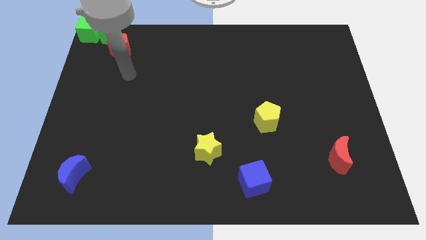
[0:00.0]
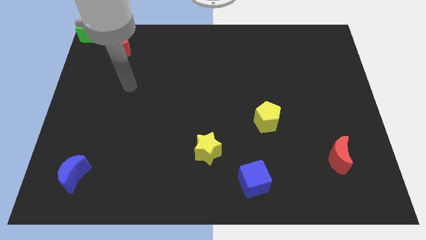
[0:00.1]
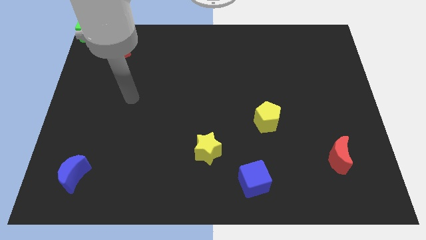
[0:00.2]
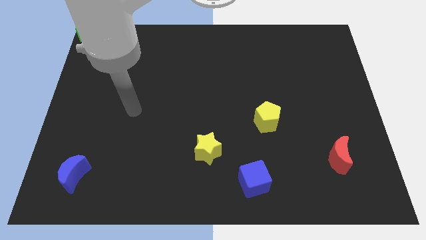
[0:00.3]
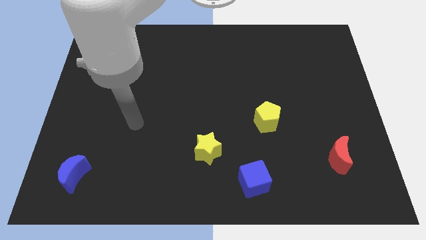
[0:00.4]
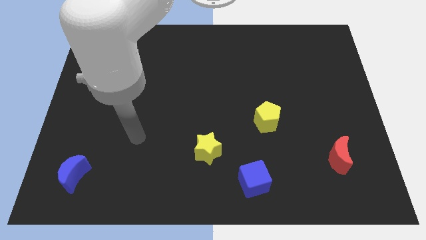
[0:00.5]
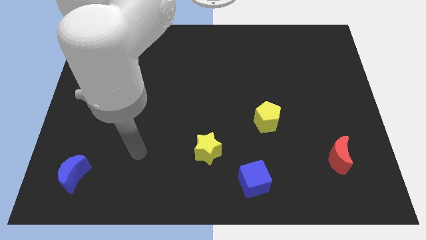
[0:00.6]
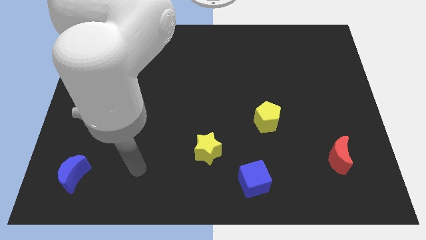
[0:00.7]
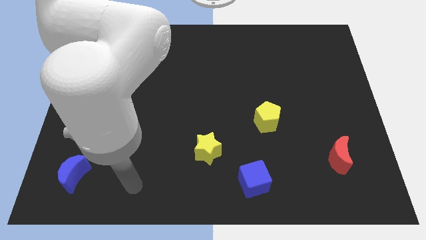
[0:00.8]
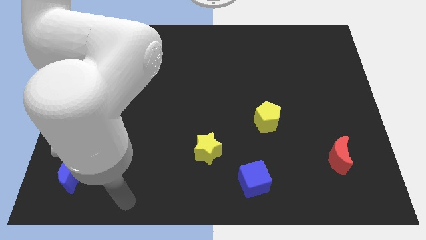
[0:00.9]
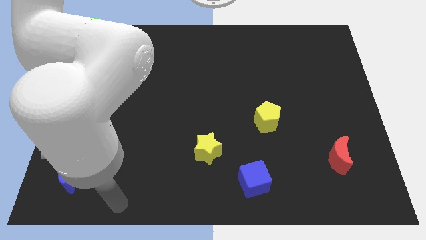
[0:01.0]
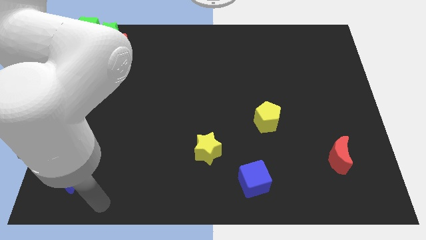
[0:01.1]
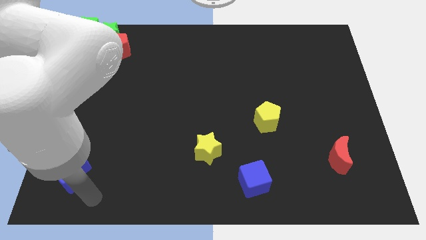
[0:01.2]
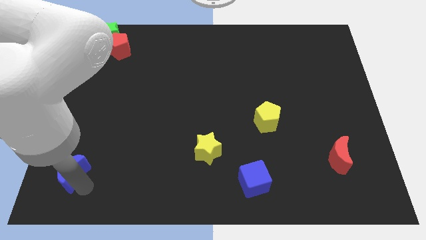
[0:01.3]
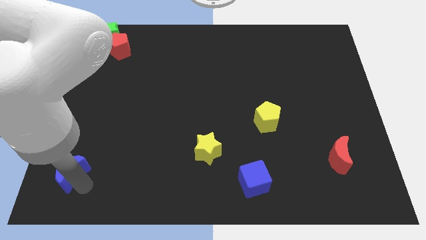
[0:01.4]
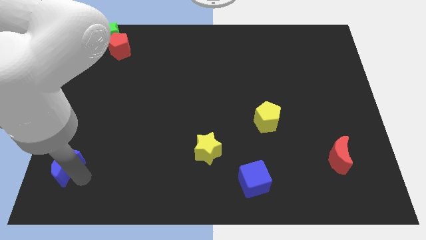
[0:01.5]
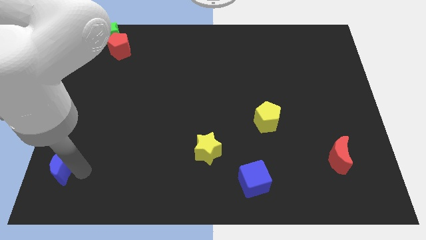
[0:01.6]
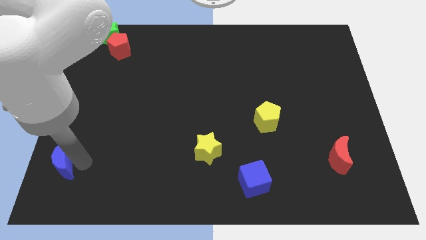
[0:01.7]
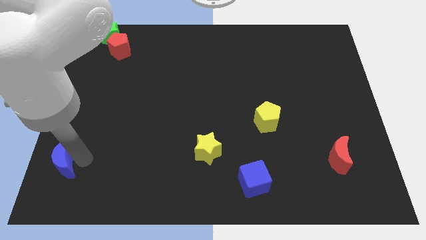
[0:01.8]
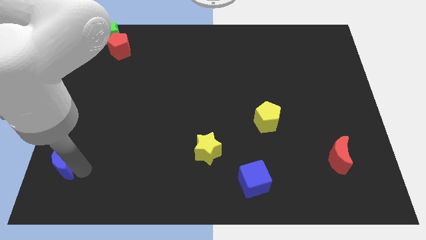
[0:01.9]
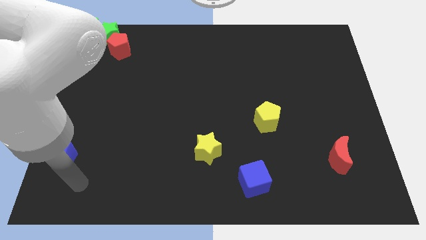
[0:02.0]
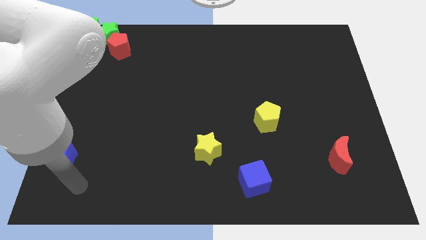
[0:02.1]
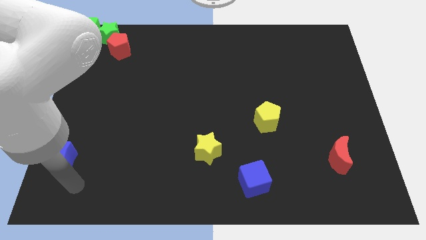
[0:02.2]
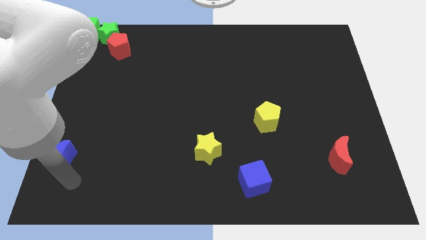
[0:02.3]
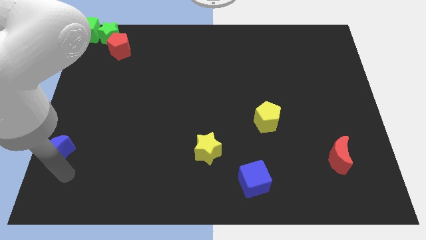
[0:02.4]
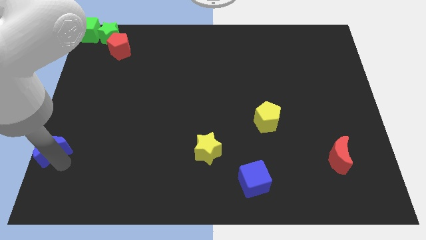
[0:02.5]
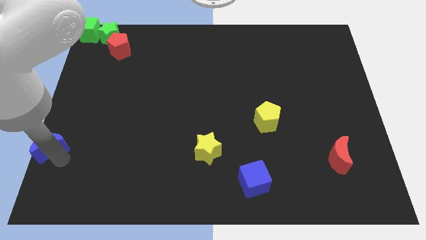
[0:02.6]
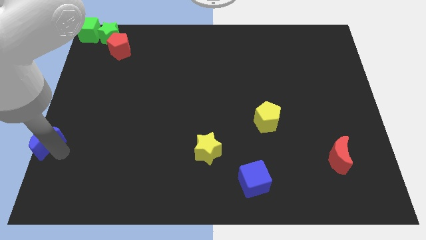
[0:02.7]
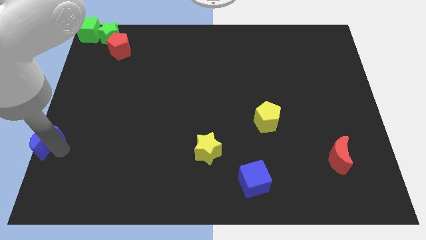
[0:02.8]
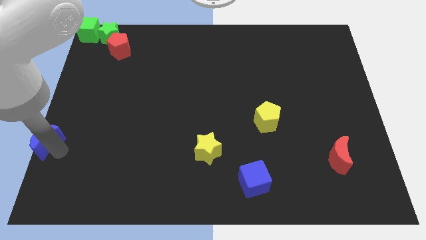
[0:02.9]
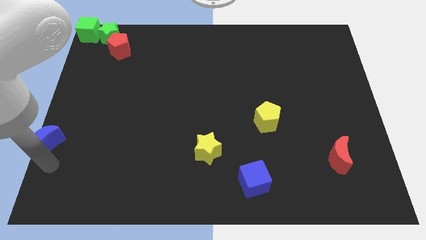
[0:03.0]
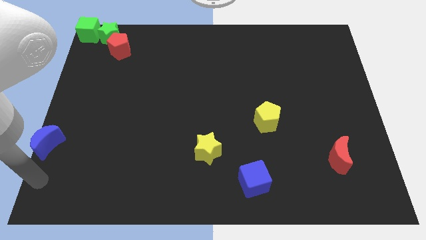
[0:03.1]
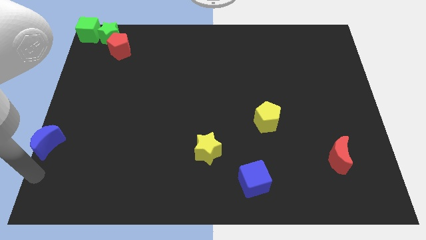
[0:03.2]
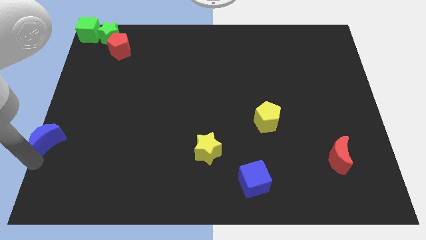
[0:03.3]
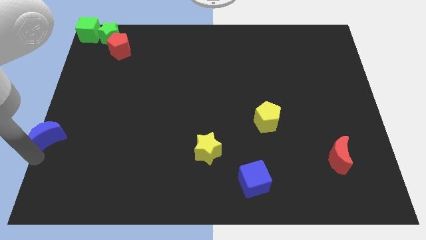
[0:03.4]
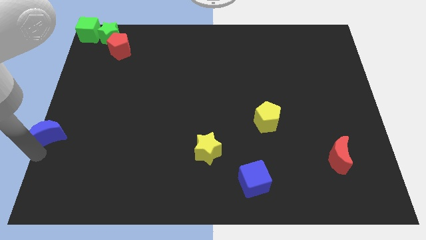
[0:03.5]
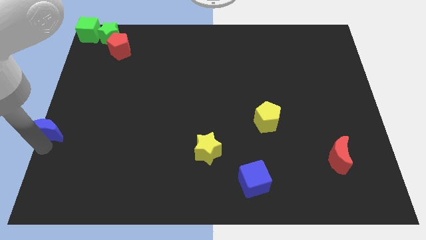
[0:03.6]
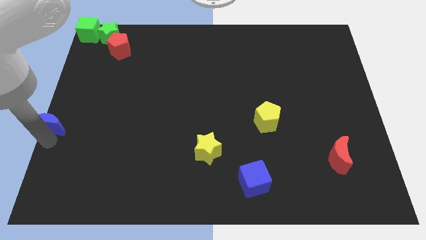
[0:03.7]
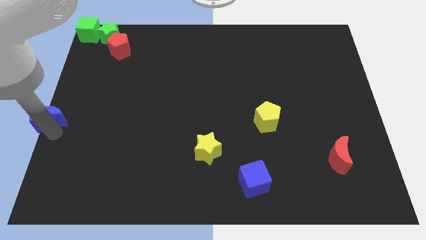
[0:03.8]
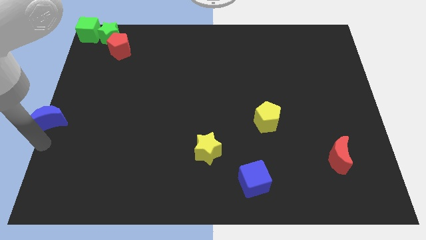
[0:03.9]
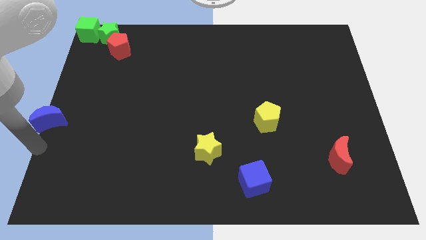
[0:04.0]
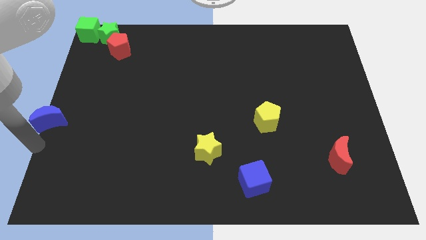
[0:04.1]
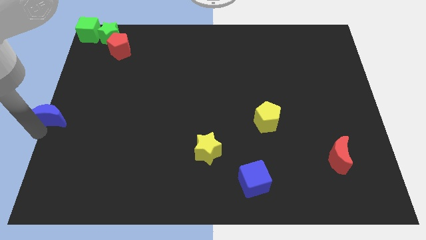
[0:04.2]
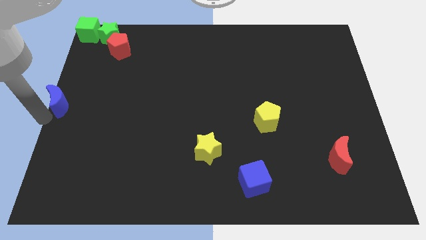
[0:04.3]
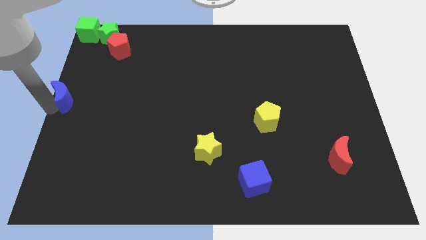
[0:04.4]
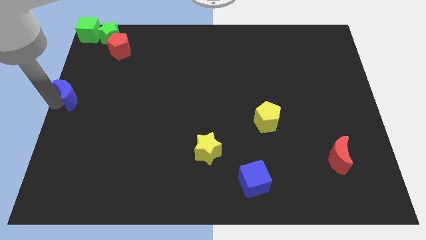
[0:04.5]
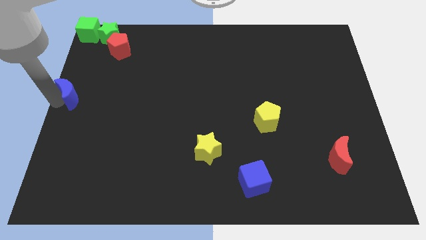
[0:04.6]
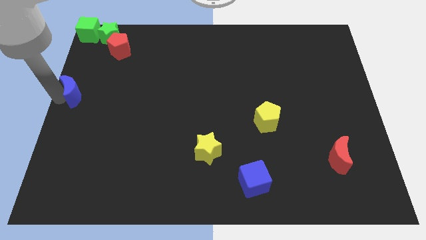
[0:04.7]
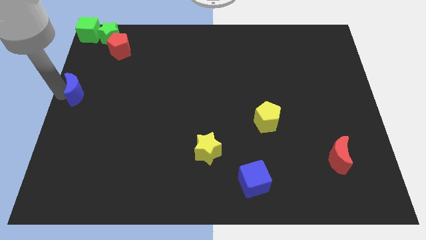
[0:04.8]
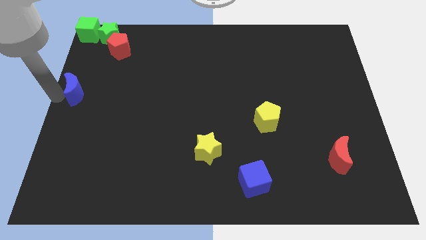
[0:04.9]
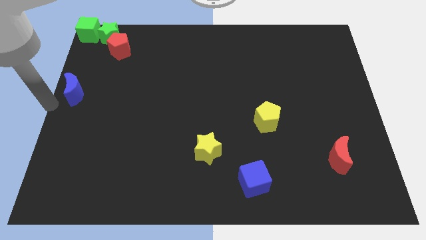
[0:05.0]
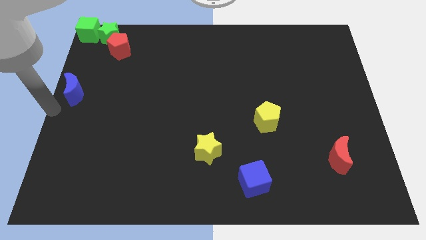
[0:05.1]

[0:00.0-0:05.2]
slide the blue crescent slightly towards up

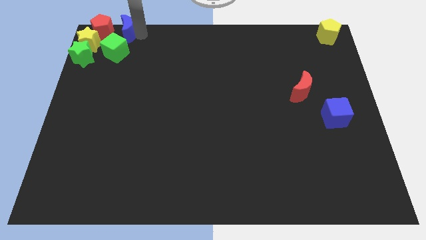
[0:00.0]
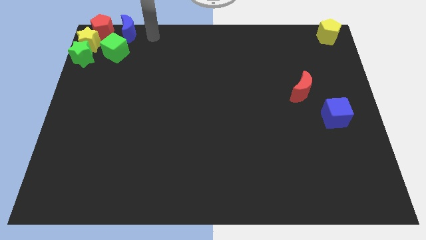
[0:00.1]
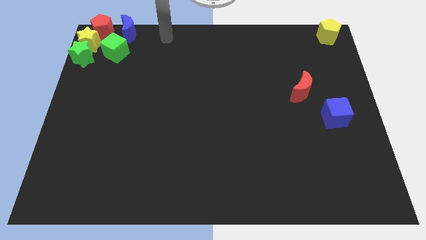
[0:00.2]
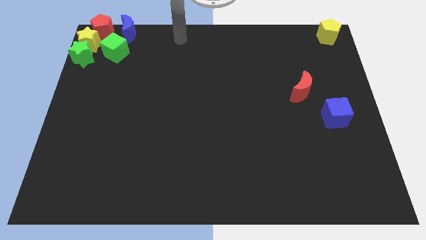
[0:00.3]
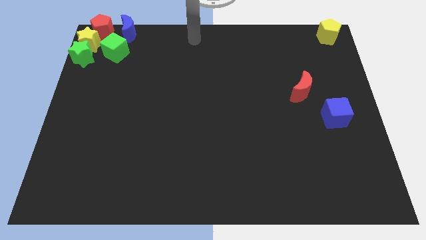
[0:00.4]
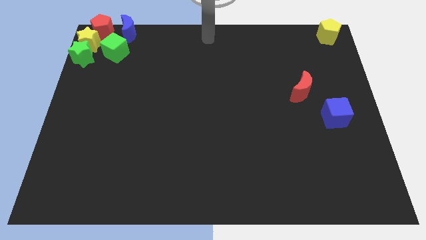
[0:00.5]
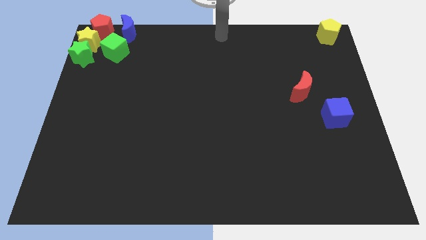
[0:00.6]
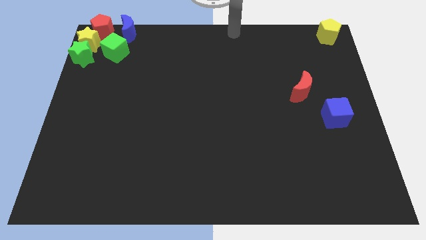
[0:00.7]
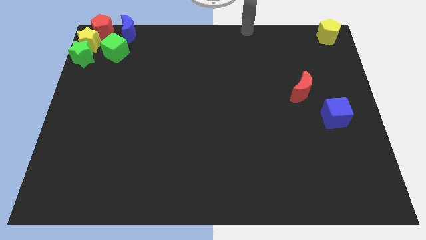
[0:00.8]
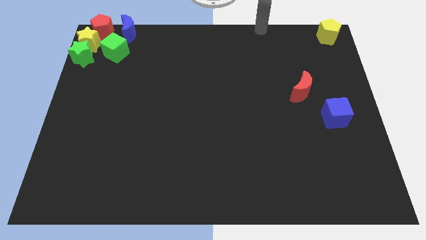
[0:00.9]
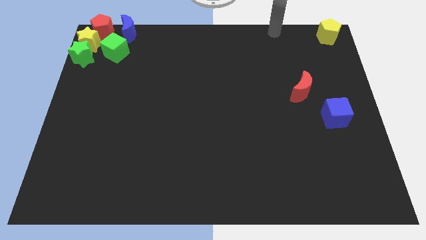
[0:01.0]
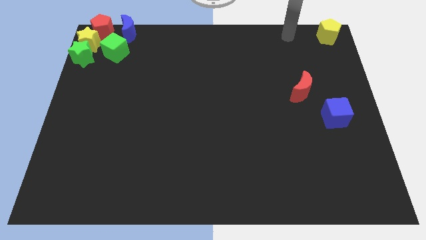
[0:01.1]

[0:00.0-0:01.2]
move the arm left to the right of the board

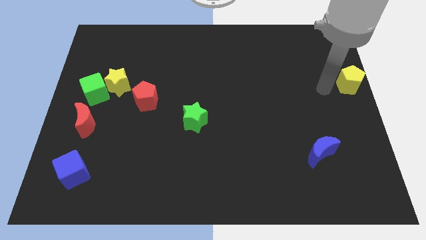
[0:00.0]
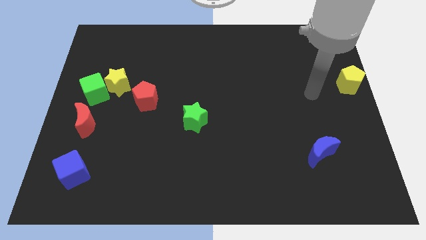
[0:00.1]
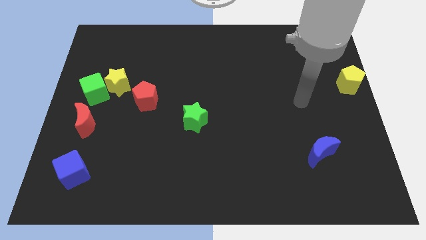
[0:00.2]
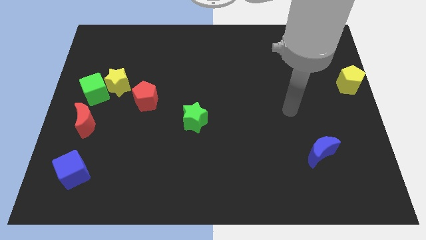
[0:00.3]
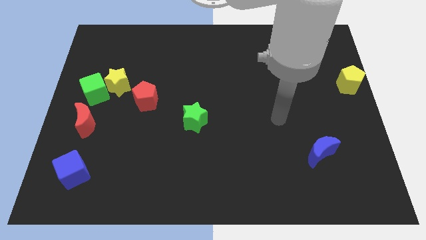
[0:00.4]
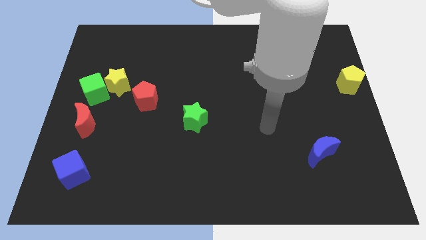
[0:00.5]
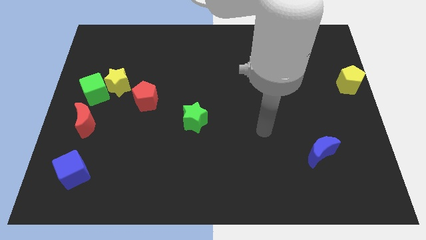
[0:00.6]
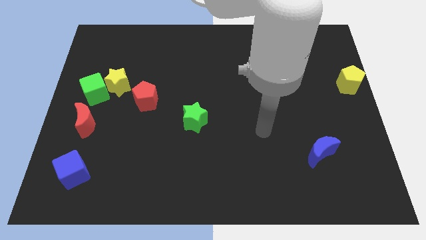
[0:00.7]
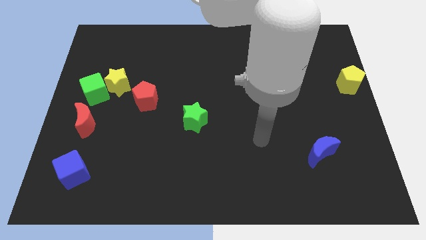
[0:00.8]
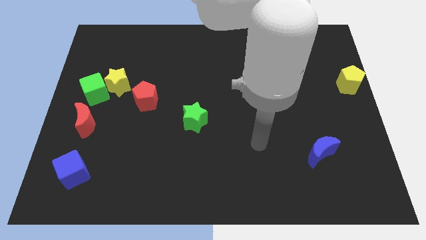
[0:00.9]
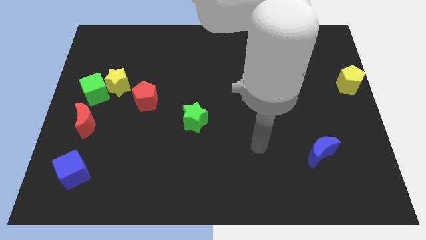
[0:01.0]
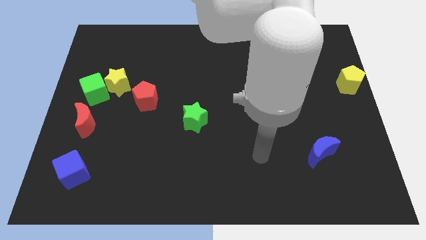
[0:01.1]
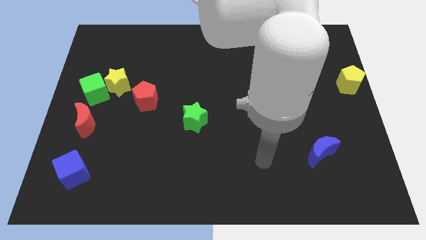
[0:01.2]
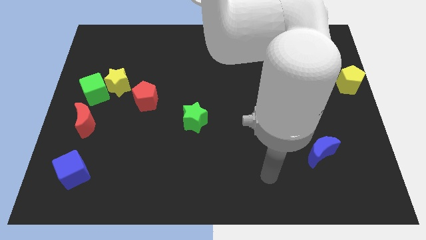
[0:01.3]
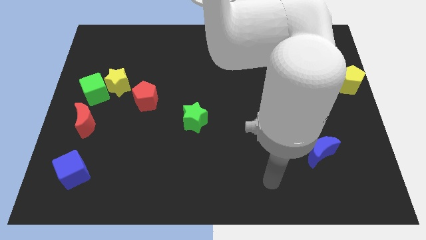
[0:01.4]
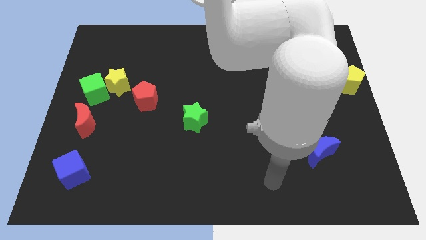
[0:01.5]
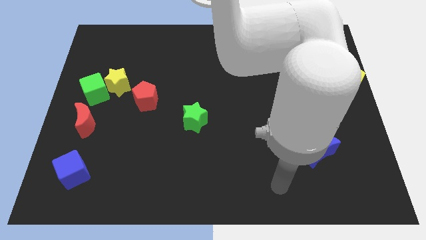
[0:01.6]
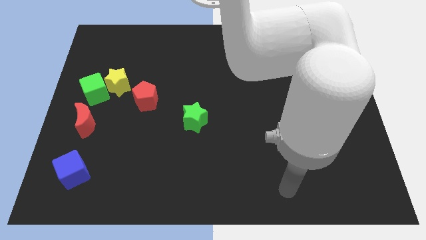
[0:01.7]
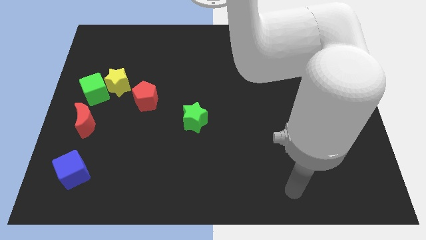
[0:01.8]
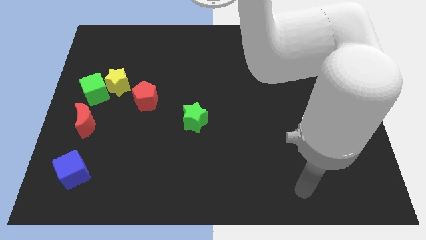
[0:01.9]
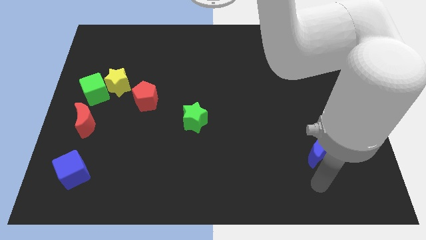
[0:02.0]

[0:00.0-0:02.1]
move your arm away from the yellow pentgaon

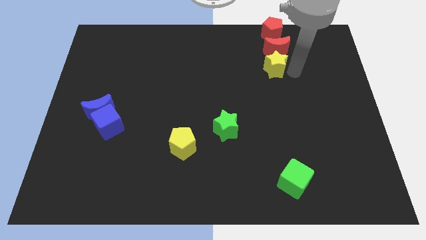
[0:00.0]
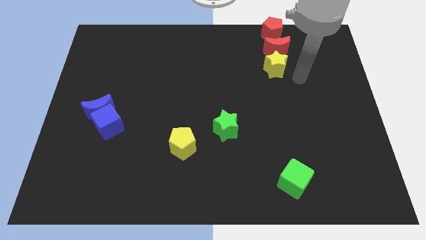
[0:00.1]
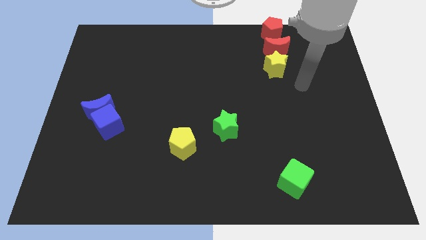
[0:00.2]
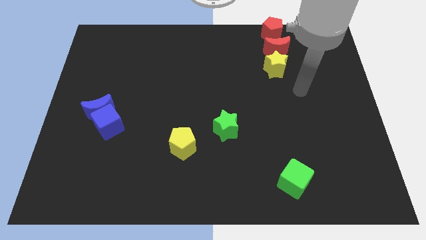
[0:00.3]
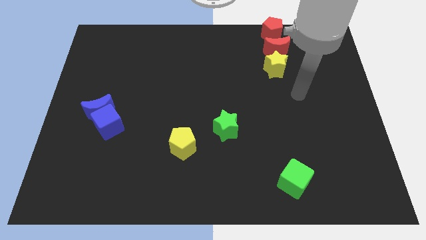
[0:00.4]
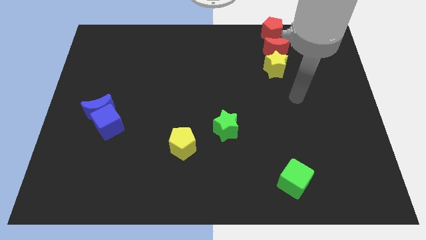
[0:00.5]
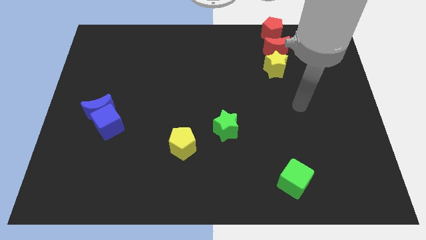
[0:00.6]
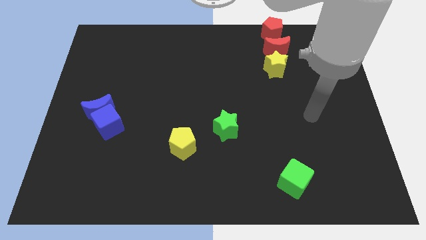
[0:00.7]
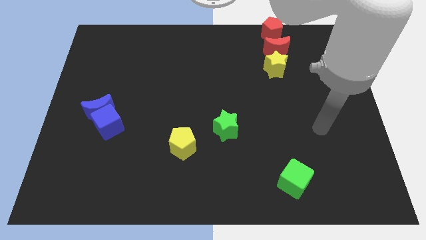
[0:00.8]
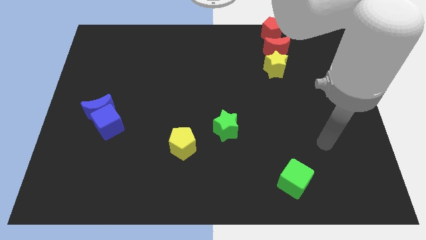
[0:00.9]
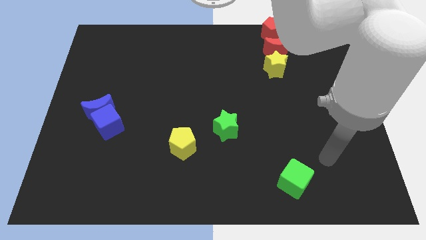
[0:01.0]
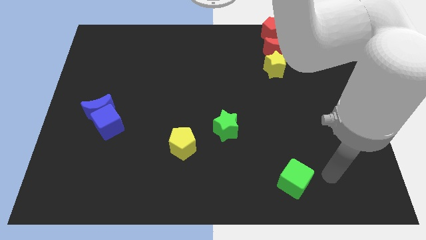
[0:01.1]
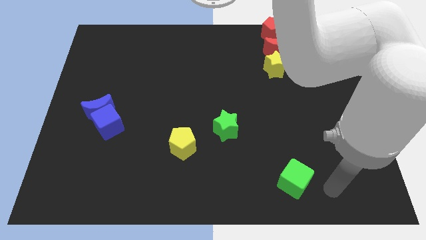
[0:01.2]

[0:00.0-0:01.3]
point your arm at the right of the green cube
